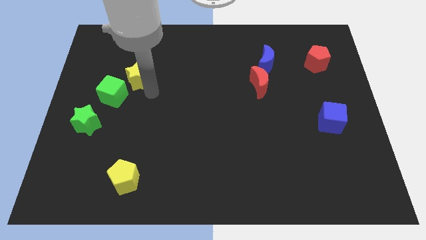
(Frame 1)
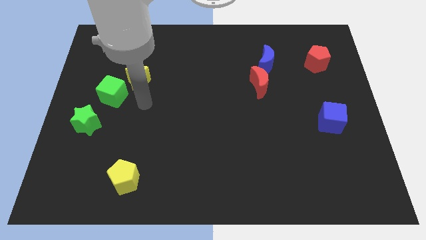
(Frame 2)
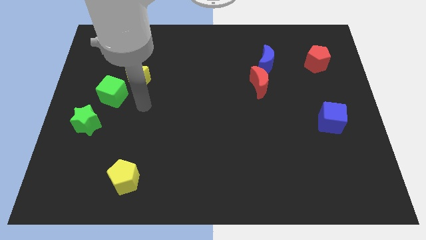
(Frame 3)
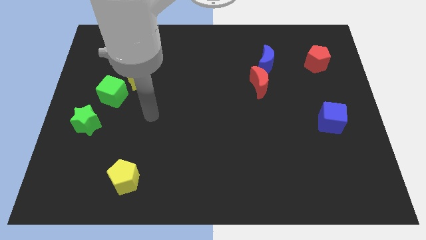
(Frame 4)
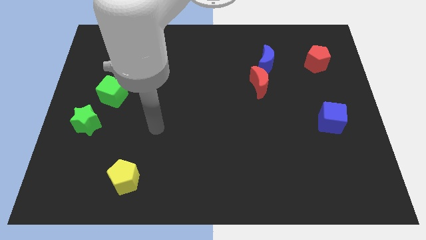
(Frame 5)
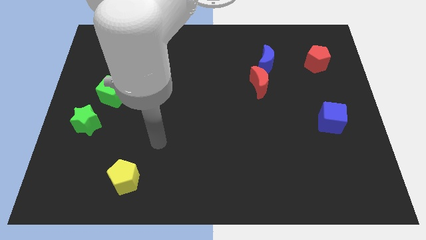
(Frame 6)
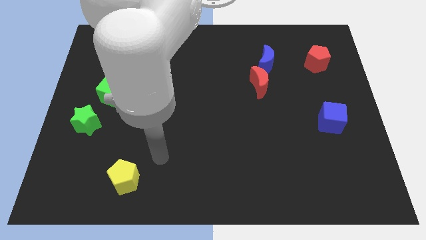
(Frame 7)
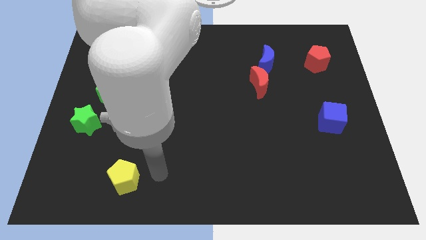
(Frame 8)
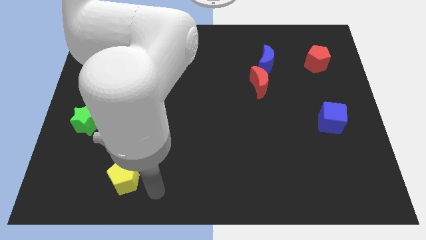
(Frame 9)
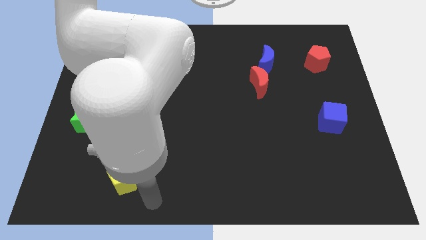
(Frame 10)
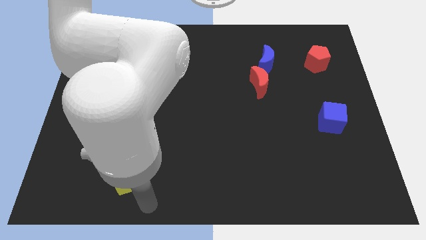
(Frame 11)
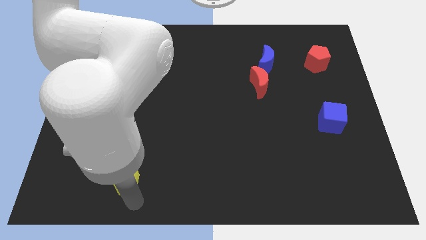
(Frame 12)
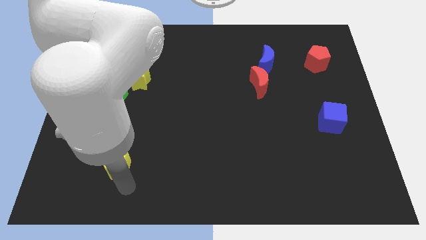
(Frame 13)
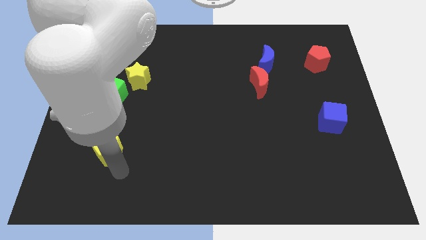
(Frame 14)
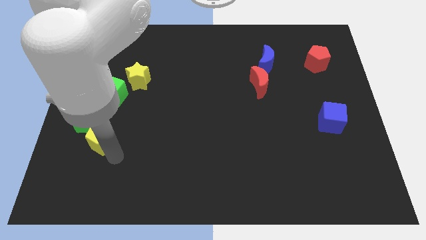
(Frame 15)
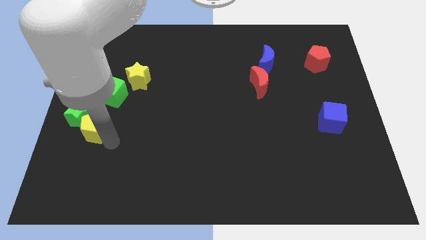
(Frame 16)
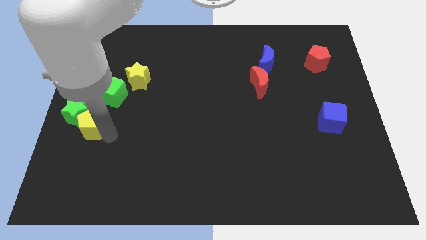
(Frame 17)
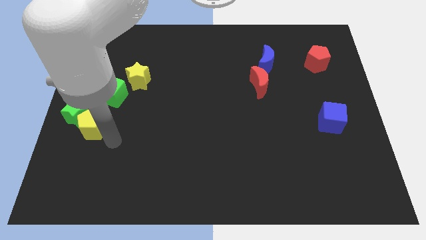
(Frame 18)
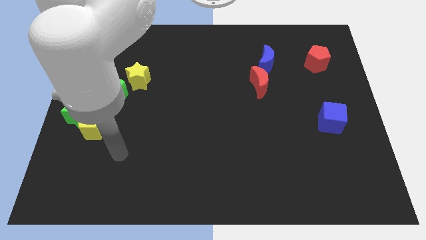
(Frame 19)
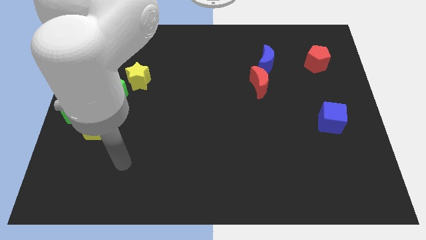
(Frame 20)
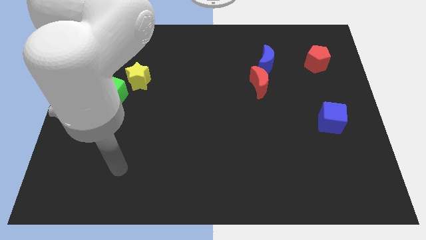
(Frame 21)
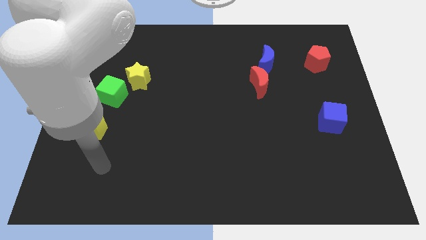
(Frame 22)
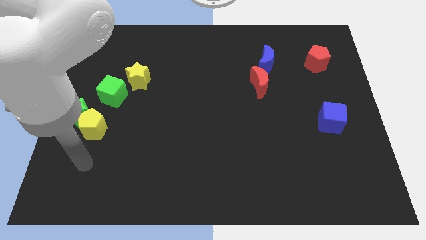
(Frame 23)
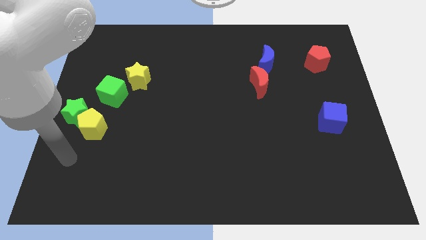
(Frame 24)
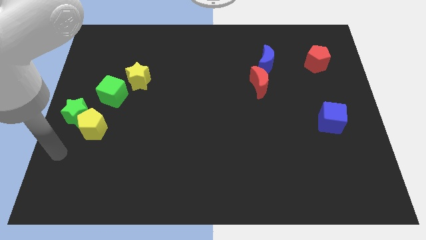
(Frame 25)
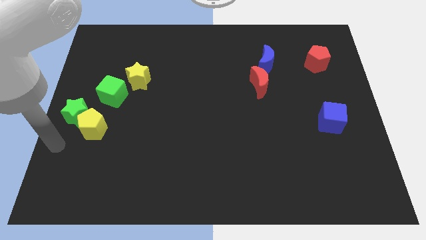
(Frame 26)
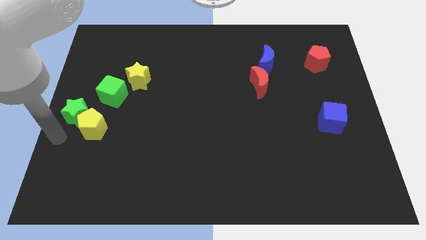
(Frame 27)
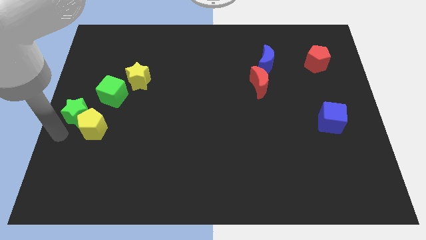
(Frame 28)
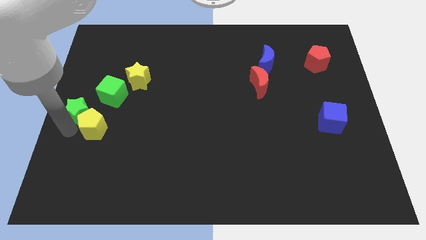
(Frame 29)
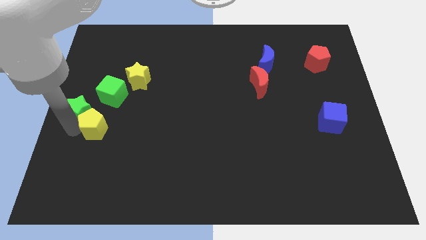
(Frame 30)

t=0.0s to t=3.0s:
push the yellow pentagon into the bottom right of the green star

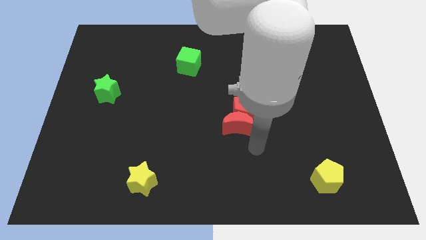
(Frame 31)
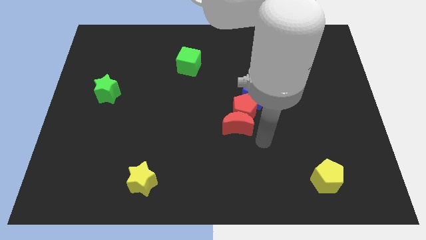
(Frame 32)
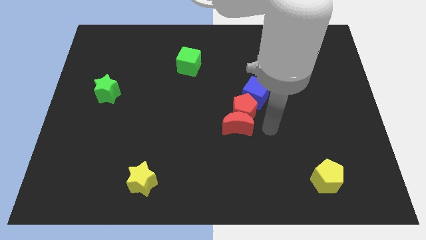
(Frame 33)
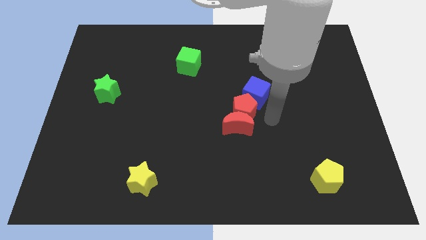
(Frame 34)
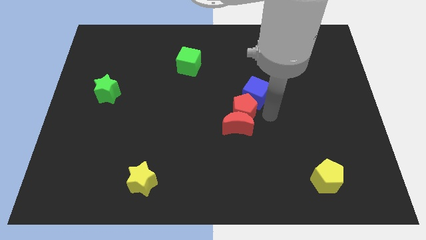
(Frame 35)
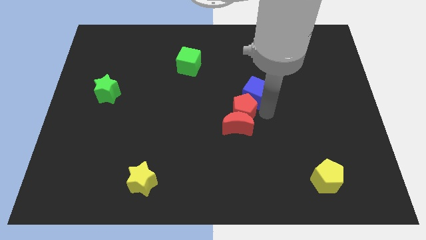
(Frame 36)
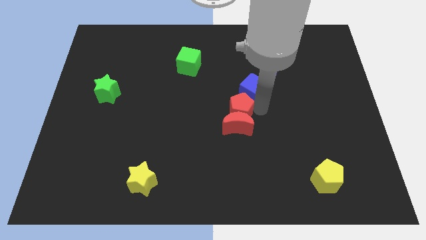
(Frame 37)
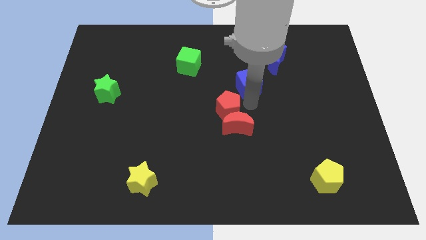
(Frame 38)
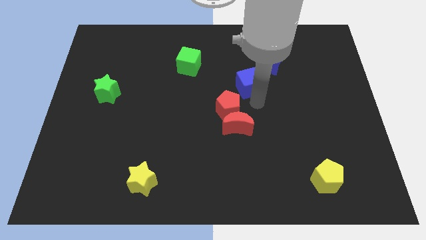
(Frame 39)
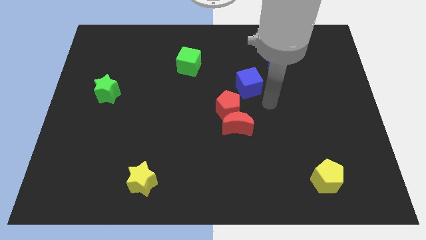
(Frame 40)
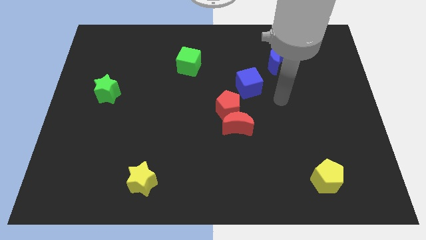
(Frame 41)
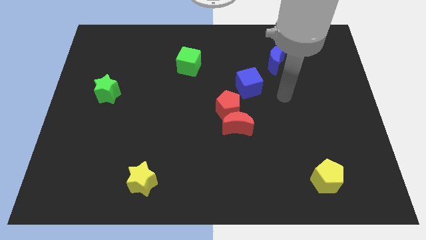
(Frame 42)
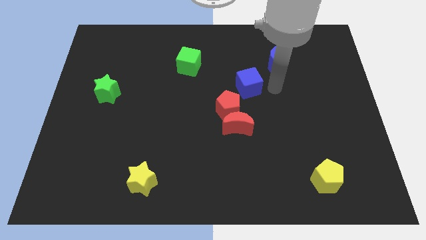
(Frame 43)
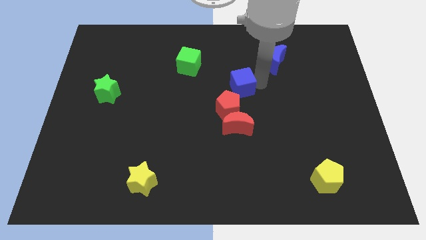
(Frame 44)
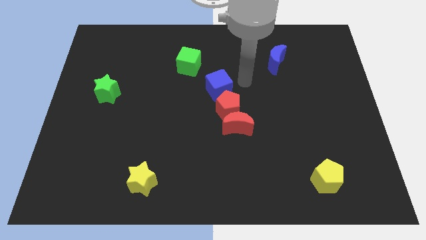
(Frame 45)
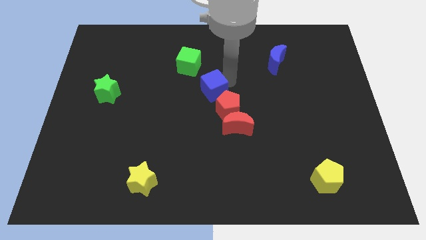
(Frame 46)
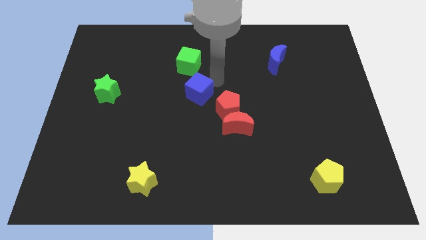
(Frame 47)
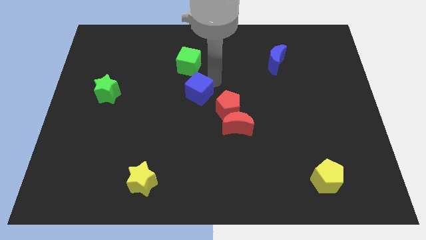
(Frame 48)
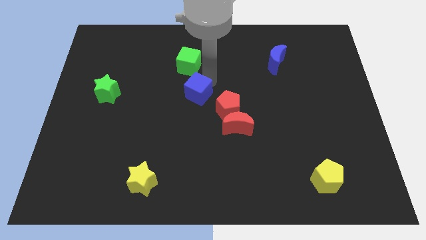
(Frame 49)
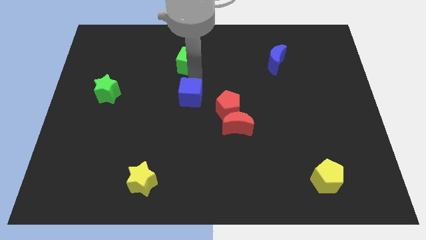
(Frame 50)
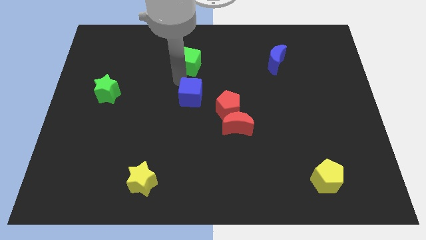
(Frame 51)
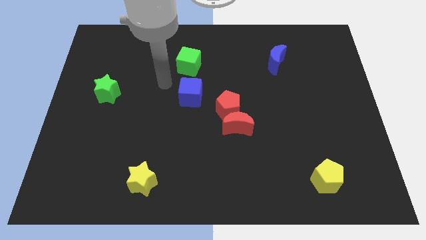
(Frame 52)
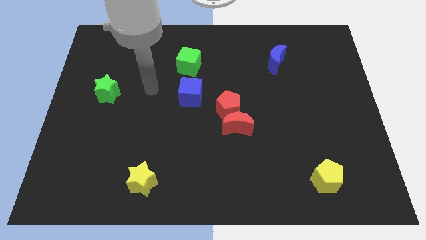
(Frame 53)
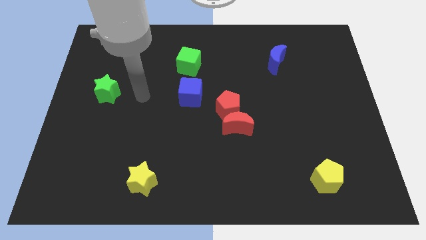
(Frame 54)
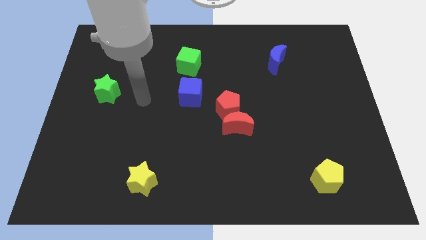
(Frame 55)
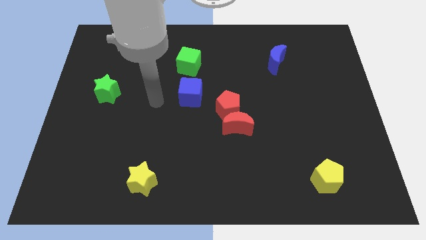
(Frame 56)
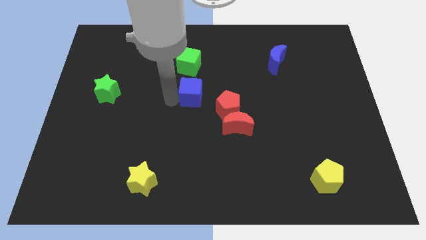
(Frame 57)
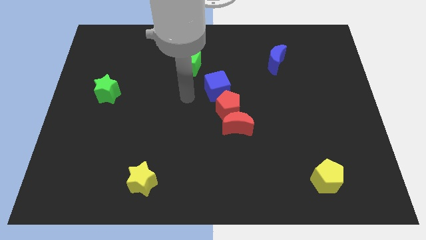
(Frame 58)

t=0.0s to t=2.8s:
place the blue cube below the green cube

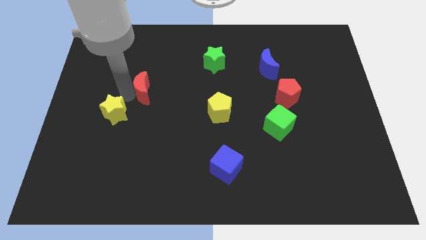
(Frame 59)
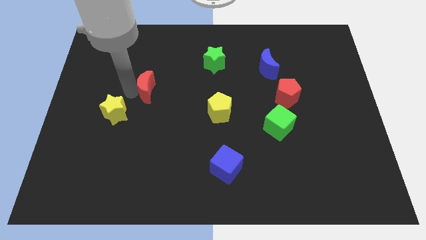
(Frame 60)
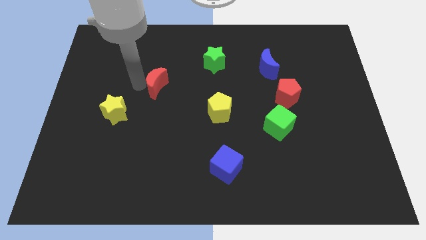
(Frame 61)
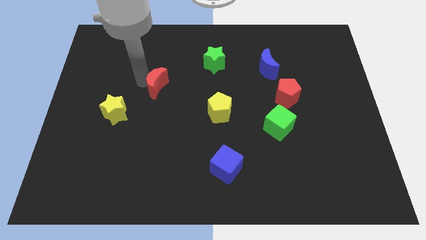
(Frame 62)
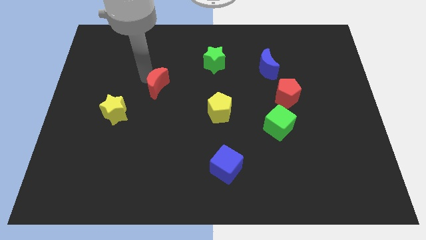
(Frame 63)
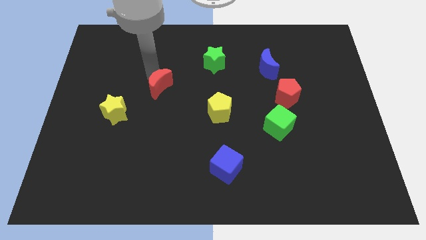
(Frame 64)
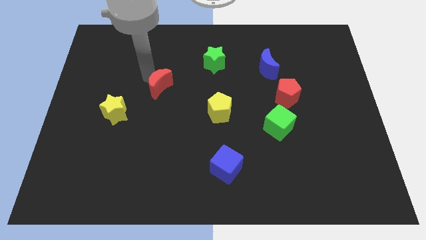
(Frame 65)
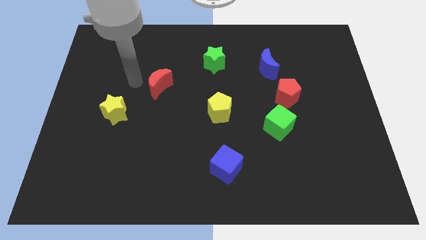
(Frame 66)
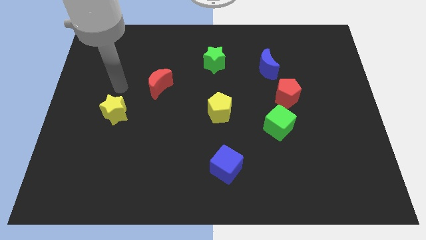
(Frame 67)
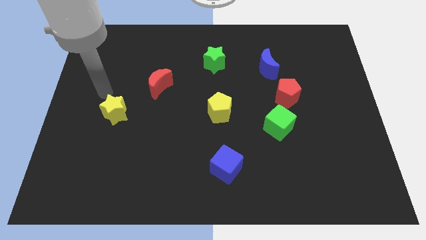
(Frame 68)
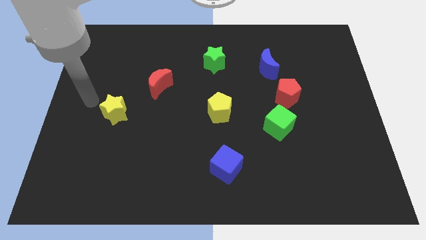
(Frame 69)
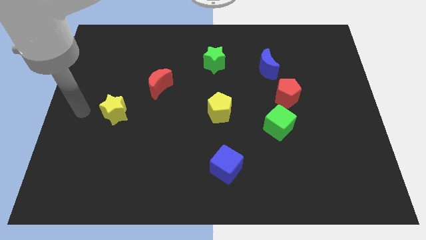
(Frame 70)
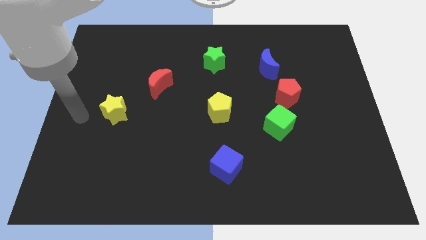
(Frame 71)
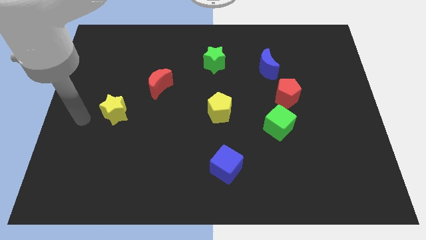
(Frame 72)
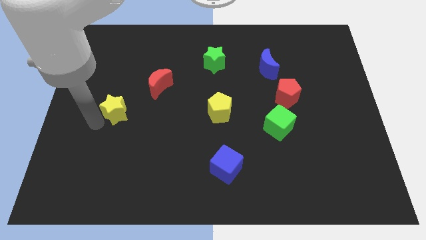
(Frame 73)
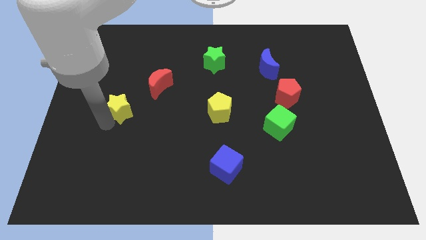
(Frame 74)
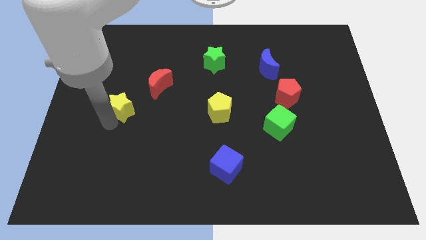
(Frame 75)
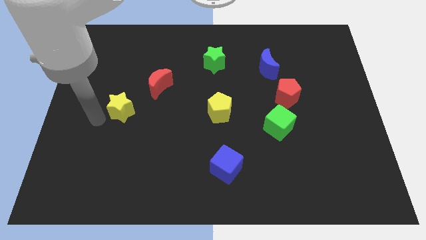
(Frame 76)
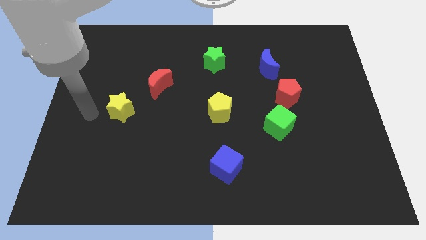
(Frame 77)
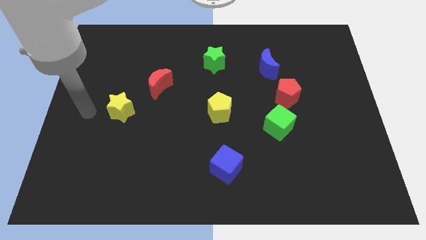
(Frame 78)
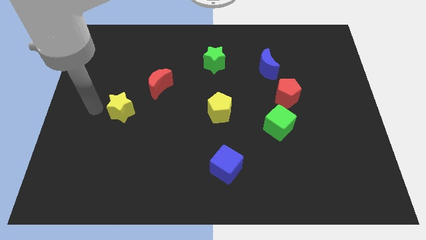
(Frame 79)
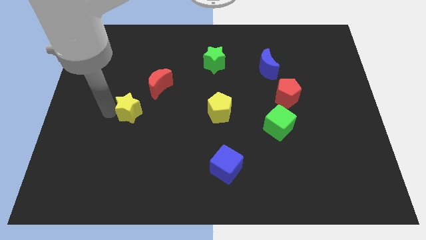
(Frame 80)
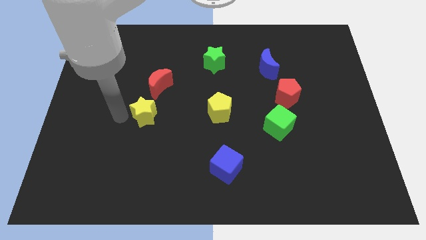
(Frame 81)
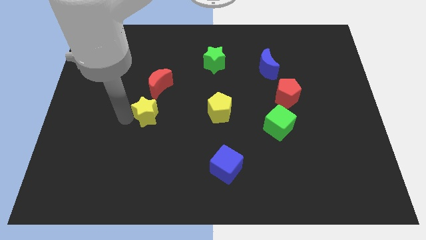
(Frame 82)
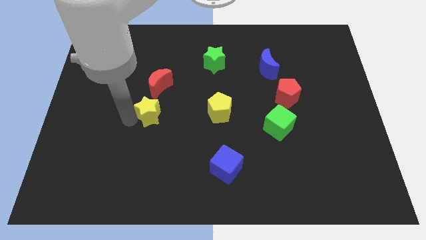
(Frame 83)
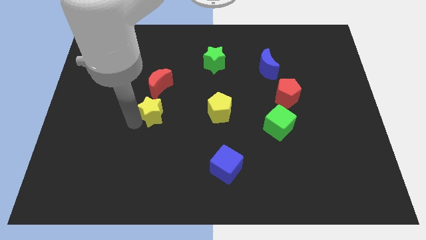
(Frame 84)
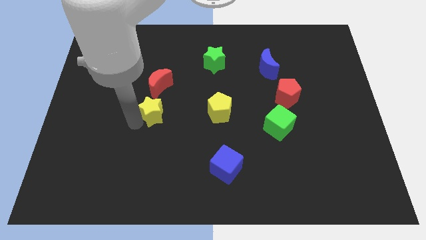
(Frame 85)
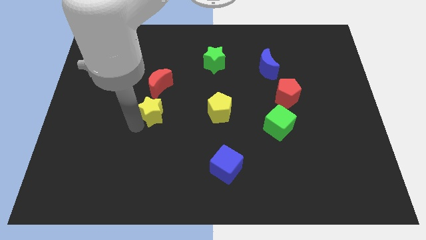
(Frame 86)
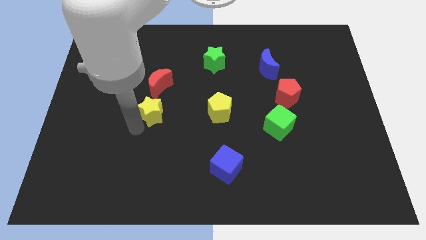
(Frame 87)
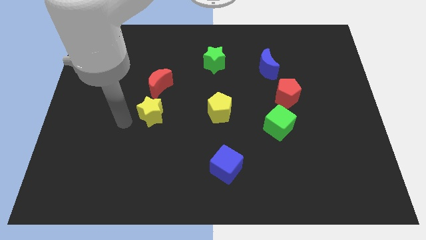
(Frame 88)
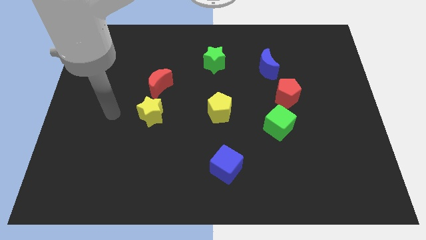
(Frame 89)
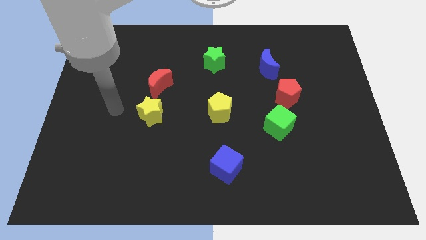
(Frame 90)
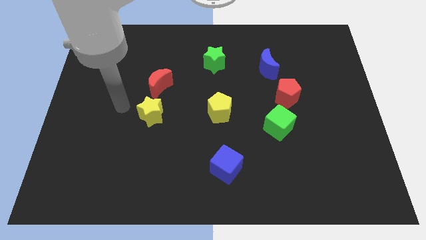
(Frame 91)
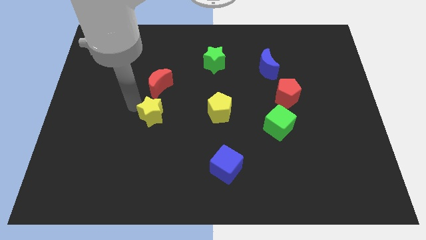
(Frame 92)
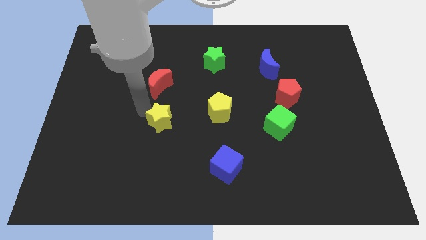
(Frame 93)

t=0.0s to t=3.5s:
push the yellow star to the bottom side of the red crescent
